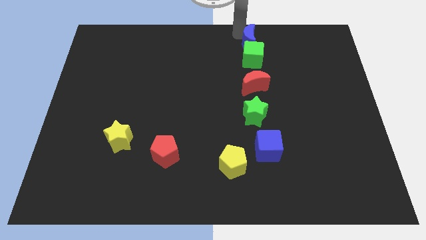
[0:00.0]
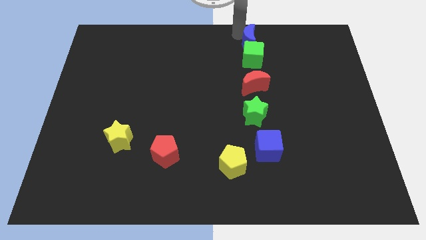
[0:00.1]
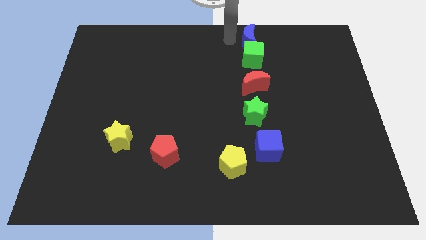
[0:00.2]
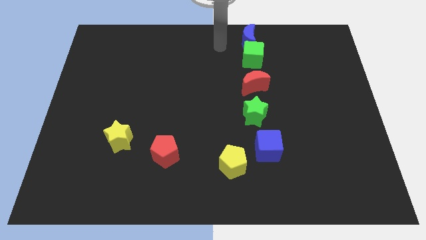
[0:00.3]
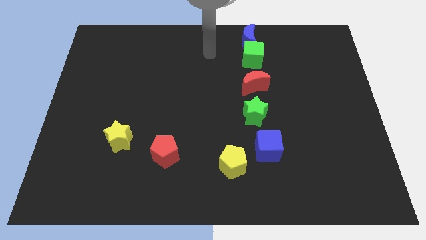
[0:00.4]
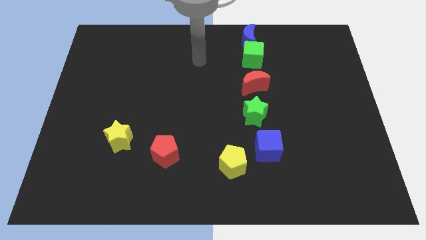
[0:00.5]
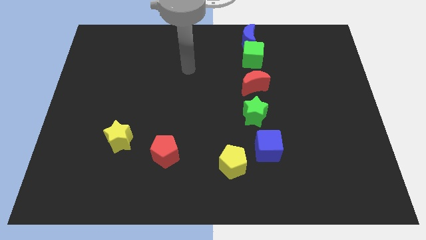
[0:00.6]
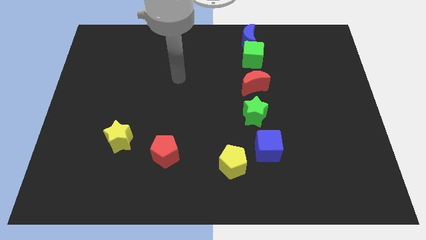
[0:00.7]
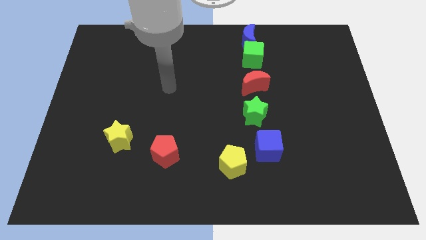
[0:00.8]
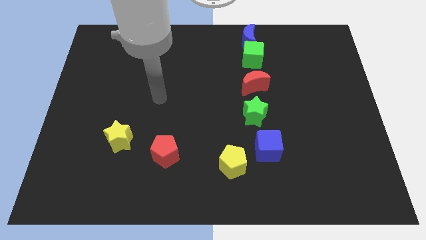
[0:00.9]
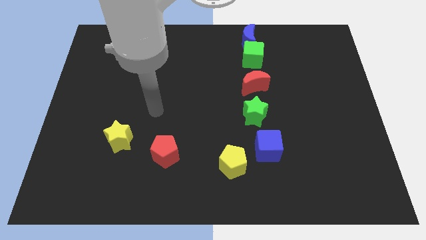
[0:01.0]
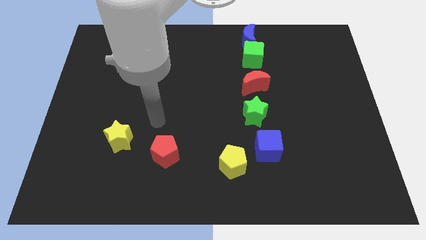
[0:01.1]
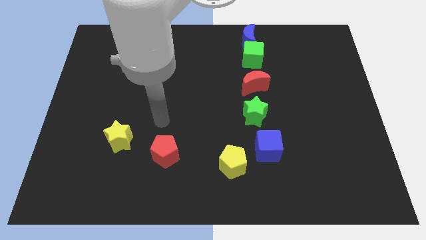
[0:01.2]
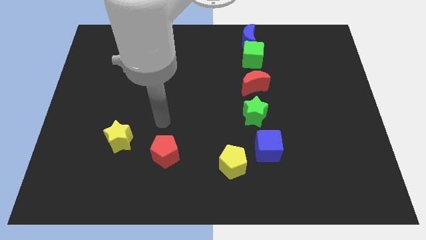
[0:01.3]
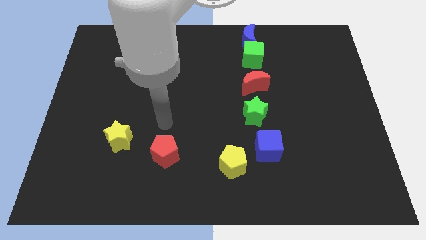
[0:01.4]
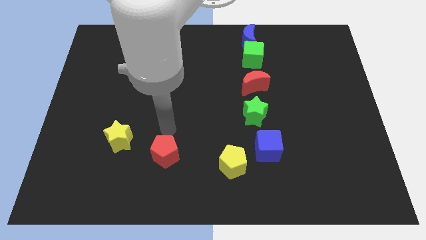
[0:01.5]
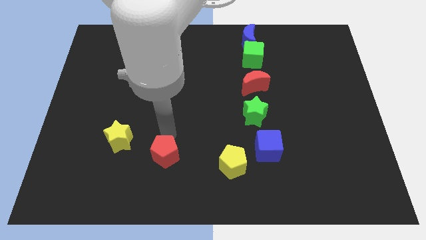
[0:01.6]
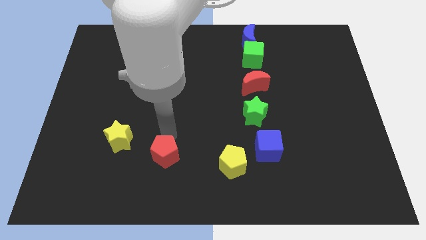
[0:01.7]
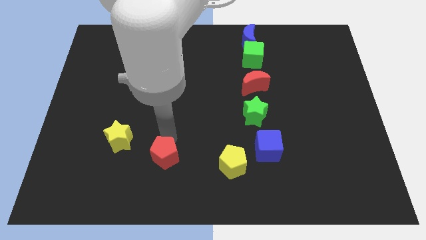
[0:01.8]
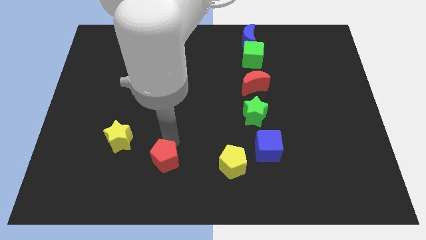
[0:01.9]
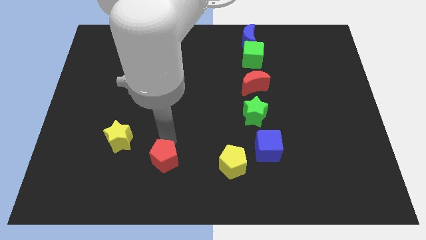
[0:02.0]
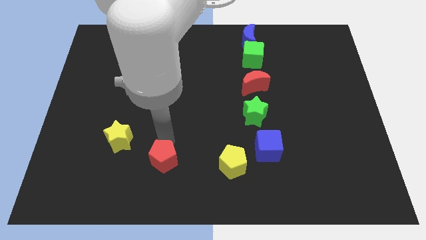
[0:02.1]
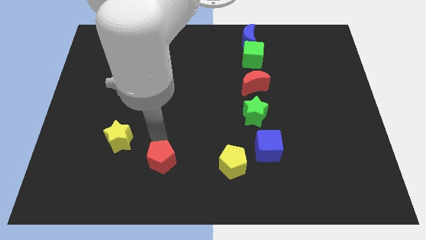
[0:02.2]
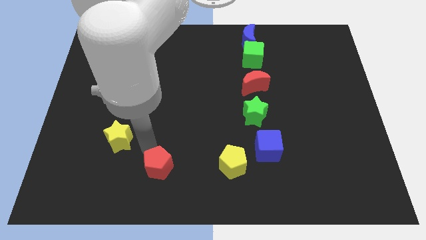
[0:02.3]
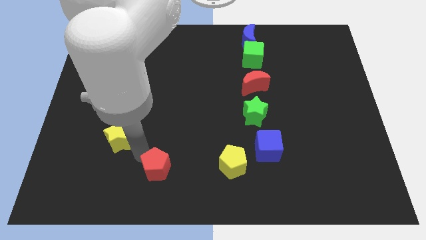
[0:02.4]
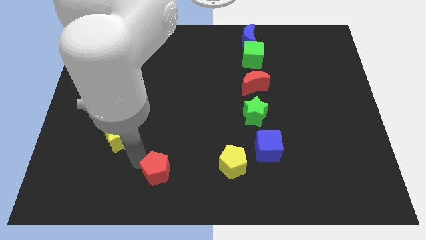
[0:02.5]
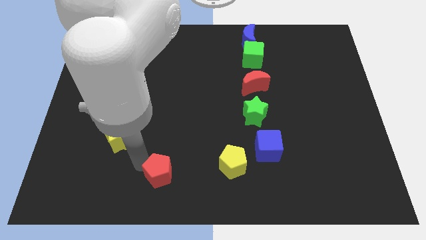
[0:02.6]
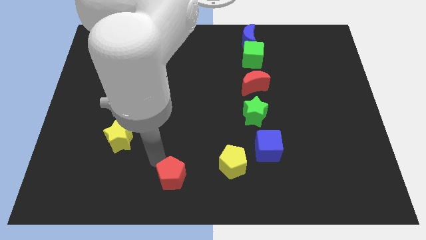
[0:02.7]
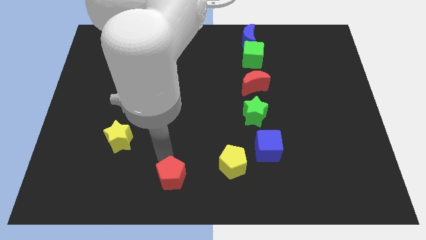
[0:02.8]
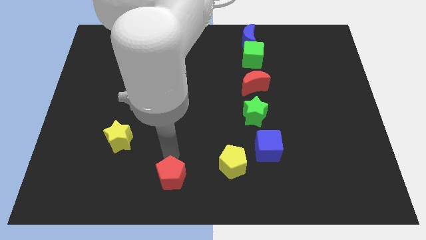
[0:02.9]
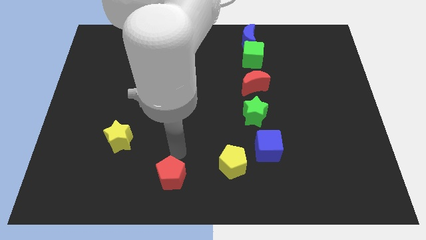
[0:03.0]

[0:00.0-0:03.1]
place the red pentagon at the left of the yellow pentagon

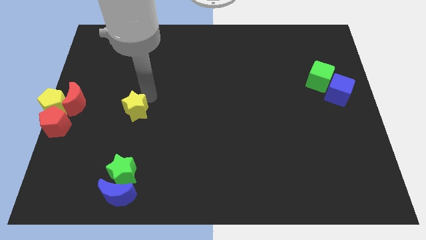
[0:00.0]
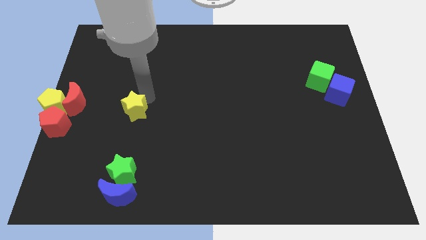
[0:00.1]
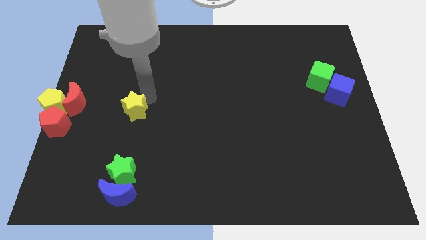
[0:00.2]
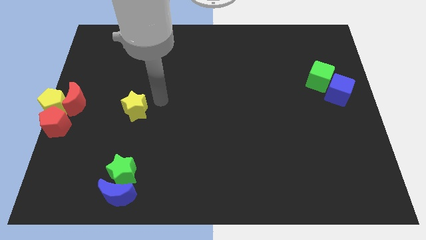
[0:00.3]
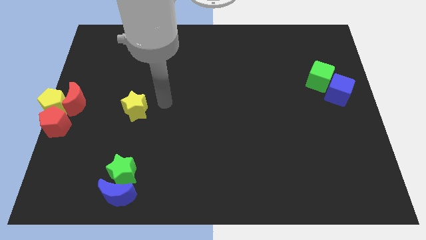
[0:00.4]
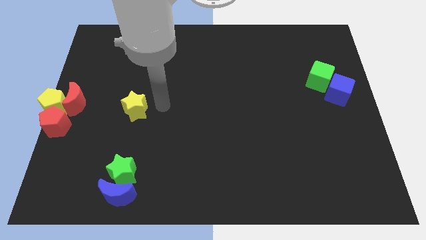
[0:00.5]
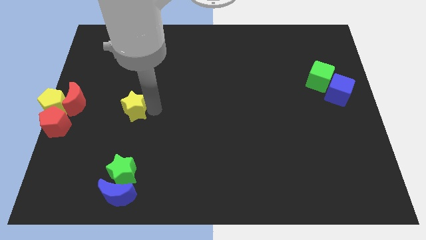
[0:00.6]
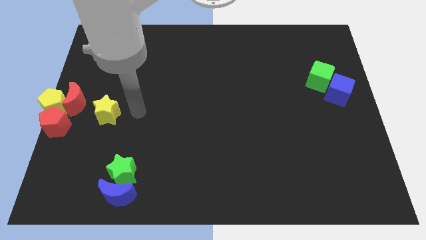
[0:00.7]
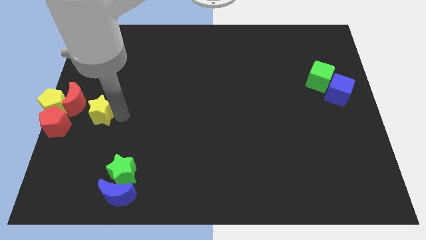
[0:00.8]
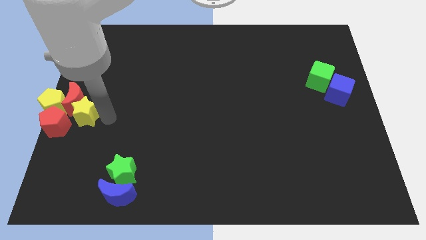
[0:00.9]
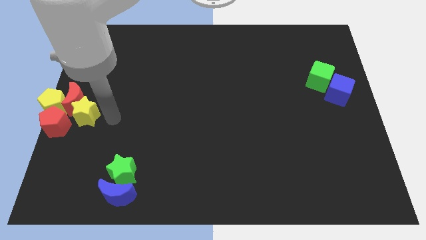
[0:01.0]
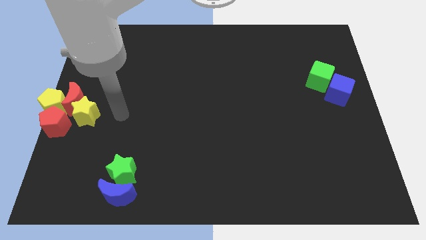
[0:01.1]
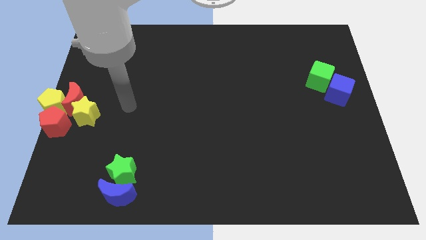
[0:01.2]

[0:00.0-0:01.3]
push the yellow star into the red moon

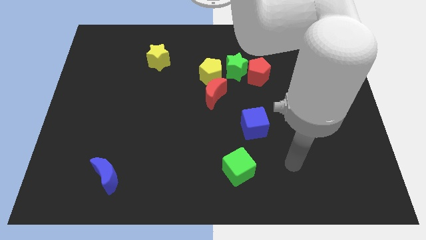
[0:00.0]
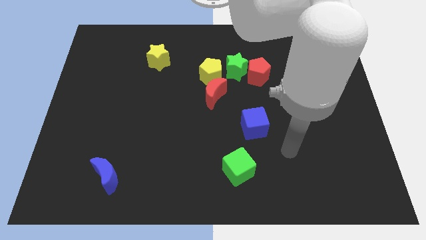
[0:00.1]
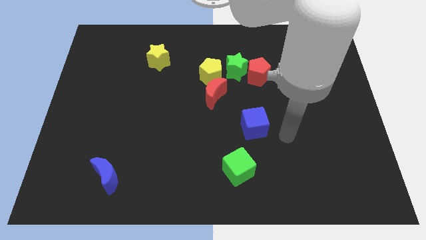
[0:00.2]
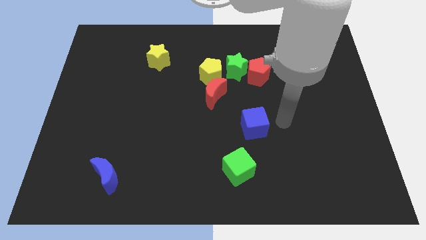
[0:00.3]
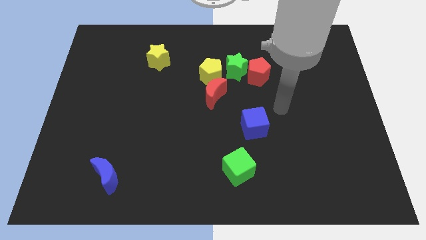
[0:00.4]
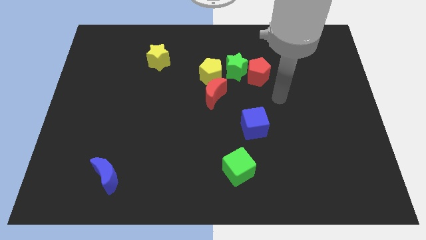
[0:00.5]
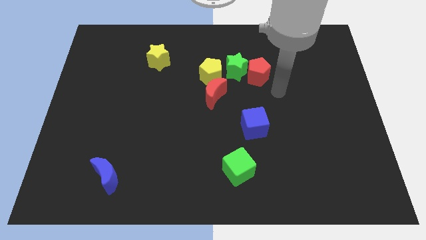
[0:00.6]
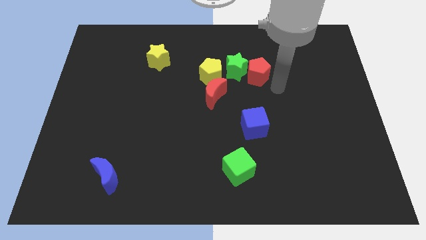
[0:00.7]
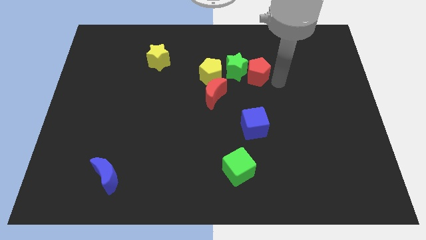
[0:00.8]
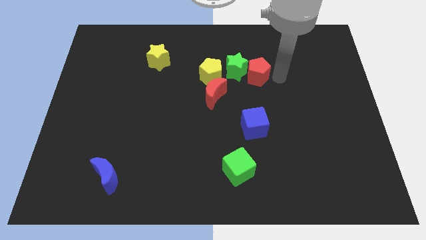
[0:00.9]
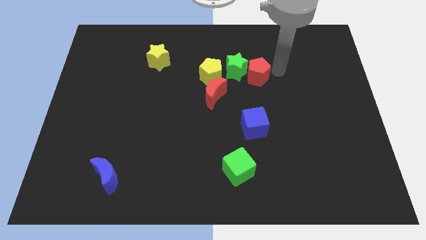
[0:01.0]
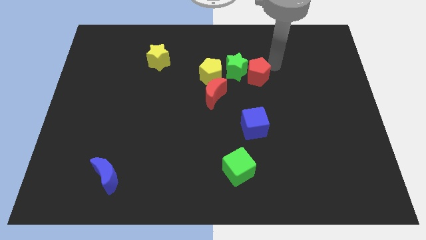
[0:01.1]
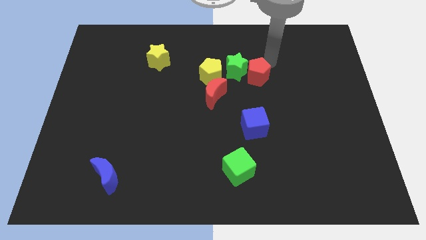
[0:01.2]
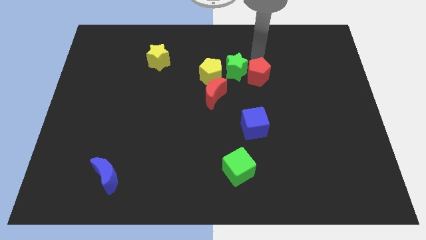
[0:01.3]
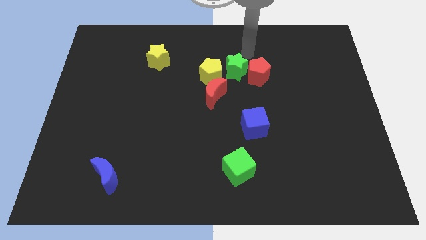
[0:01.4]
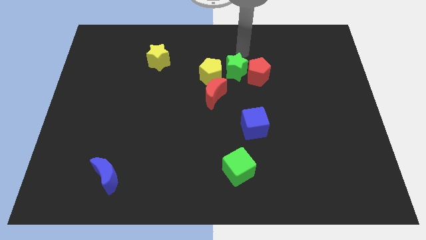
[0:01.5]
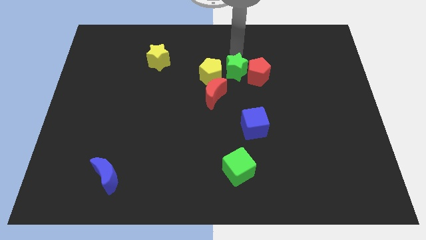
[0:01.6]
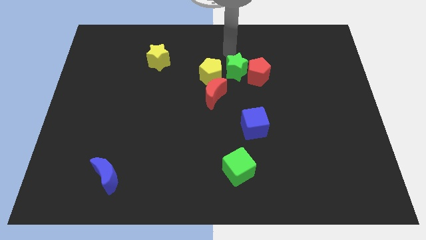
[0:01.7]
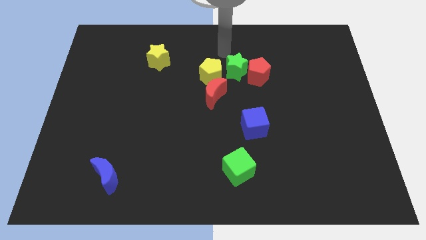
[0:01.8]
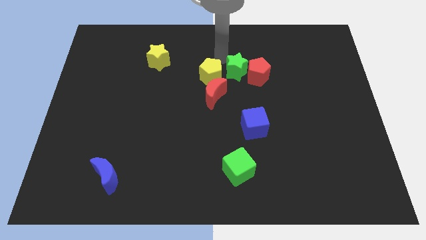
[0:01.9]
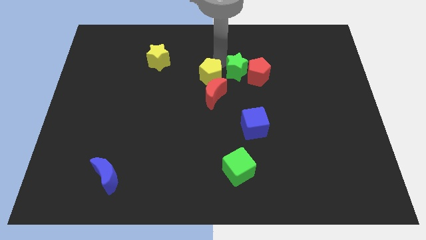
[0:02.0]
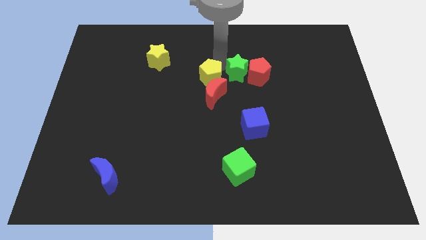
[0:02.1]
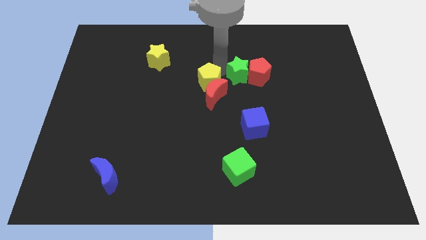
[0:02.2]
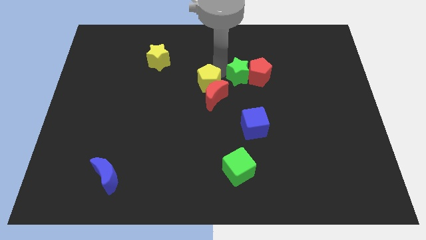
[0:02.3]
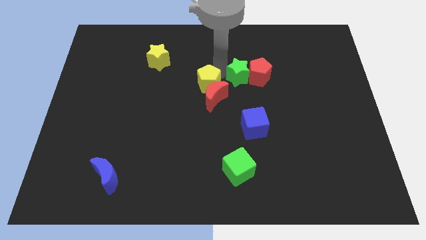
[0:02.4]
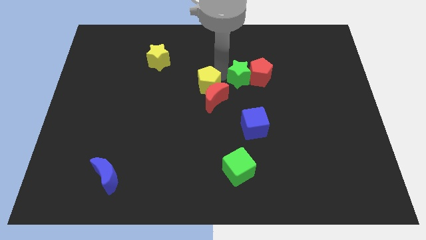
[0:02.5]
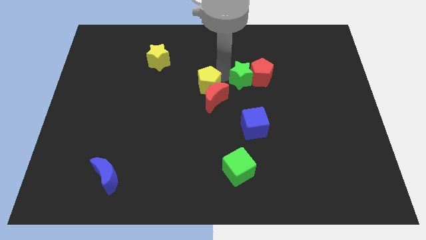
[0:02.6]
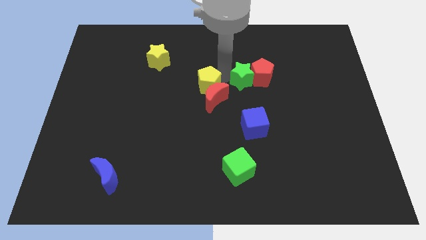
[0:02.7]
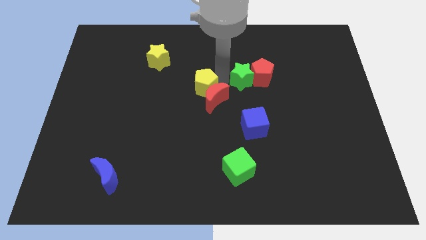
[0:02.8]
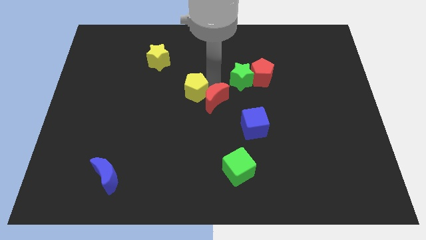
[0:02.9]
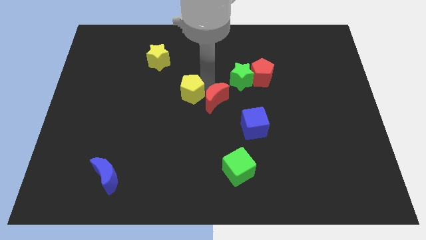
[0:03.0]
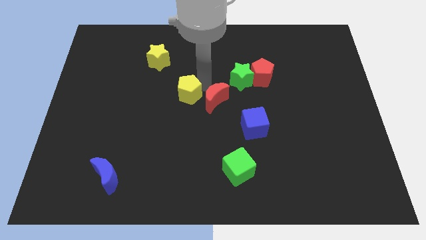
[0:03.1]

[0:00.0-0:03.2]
move the red moon and the yellow pentagon towards the center

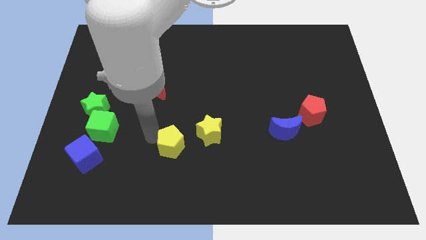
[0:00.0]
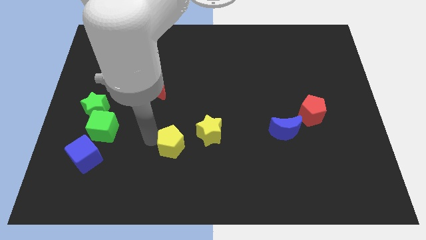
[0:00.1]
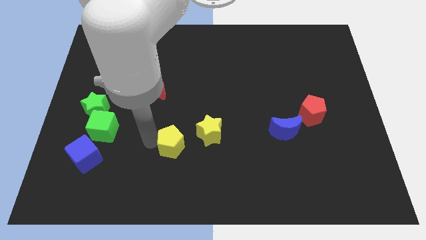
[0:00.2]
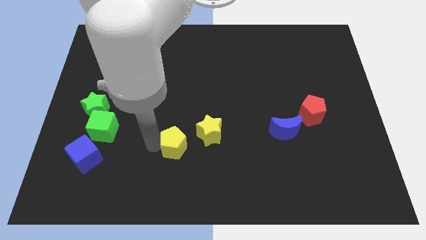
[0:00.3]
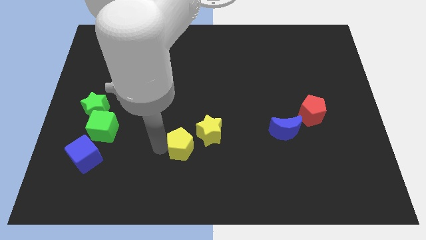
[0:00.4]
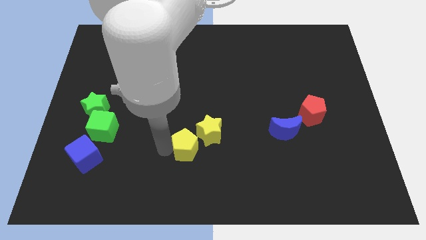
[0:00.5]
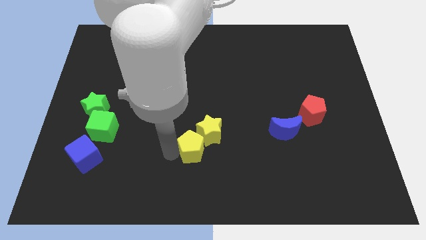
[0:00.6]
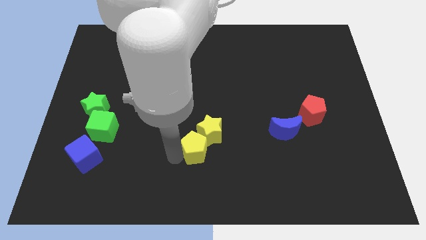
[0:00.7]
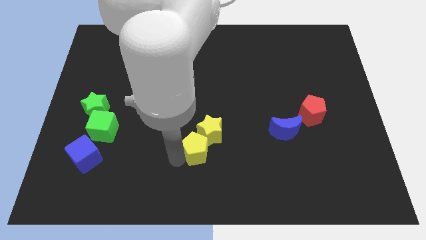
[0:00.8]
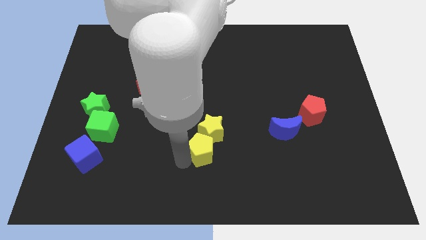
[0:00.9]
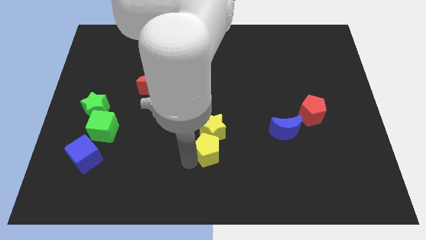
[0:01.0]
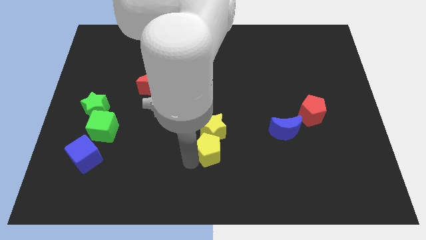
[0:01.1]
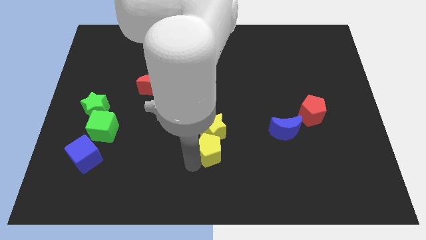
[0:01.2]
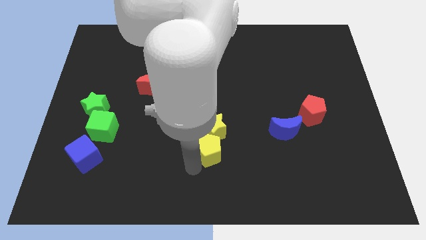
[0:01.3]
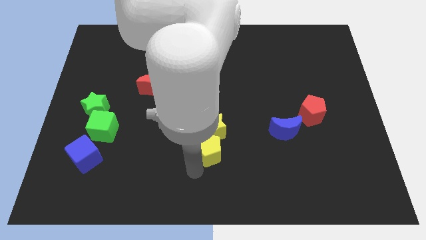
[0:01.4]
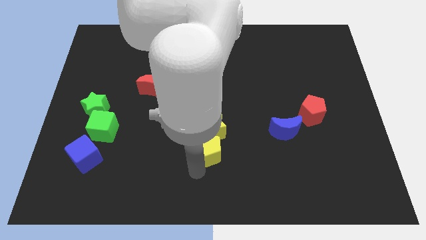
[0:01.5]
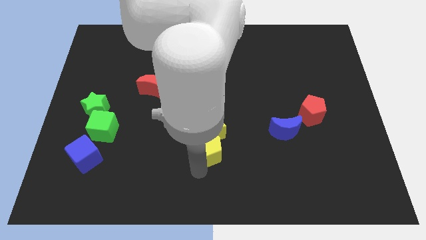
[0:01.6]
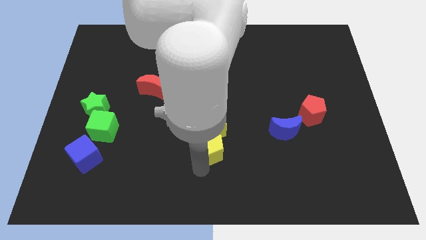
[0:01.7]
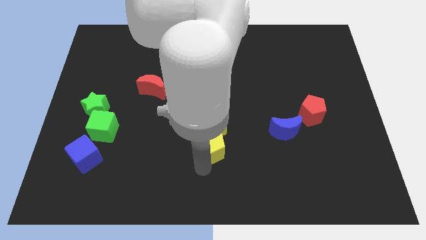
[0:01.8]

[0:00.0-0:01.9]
put yellow blocks together
